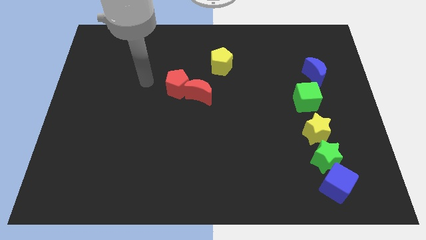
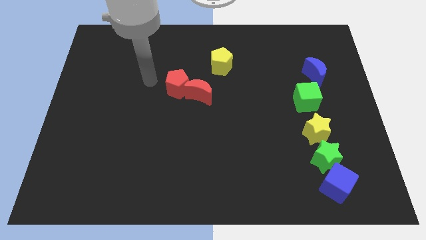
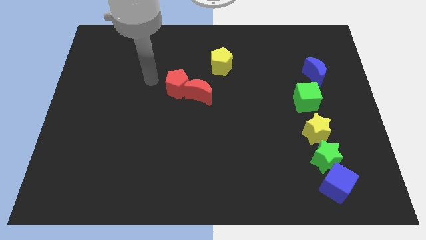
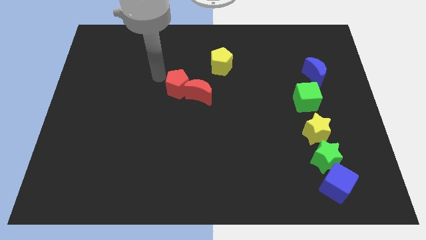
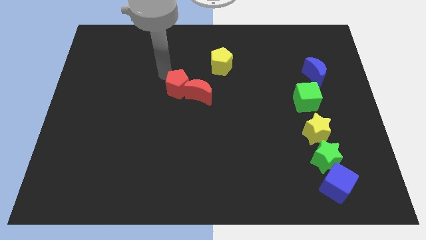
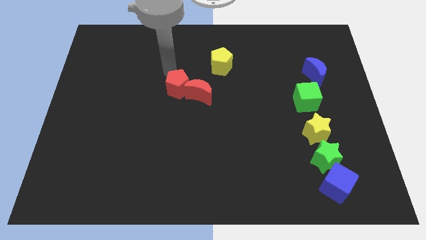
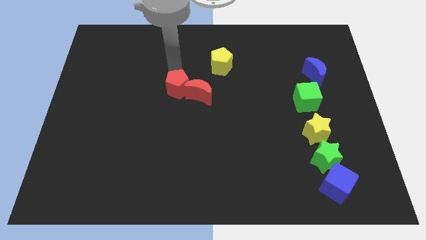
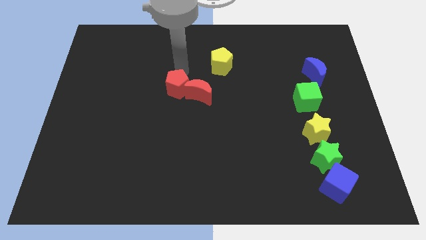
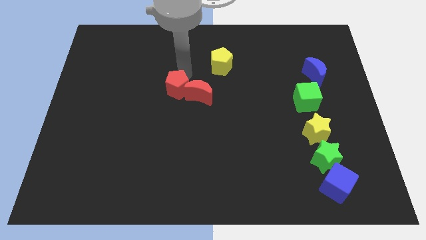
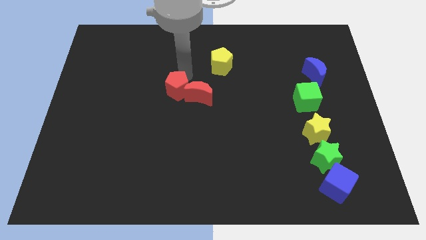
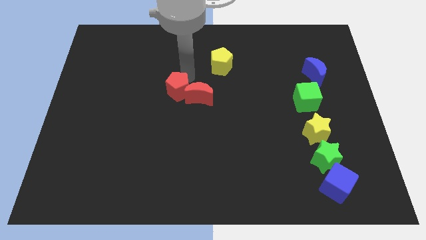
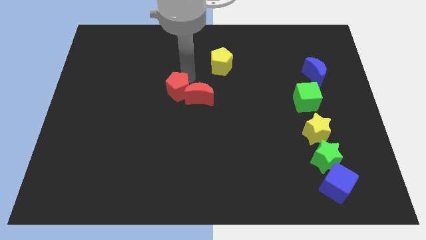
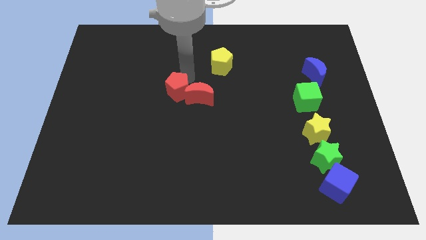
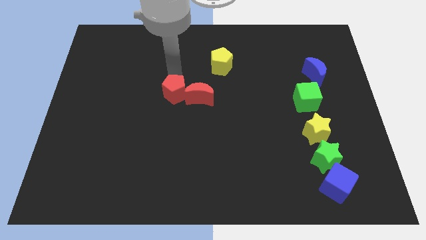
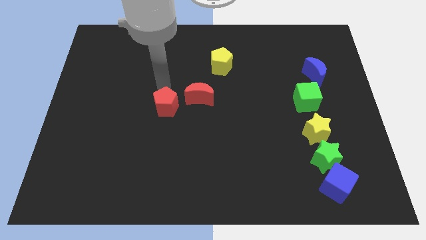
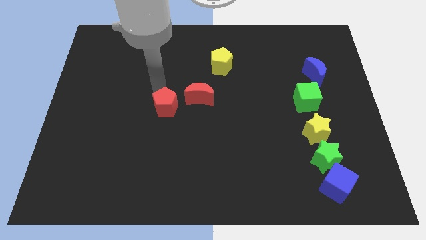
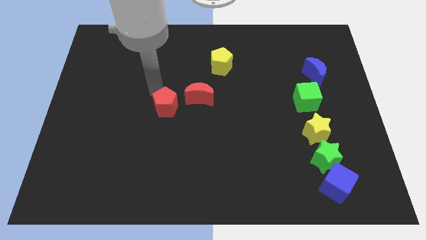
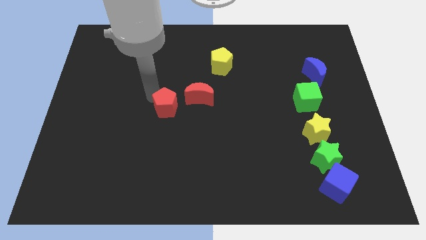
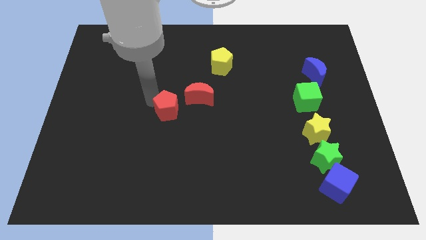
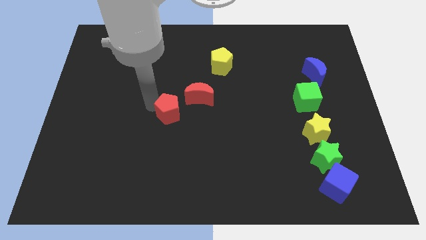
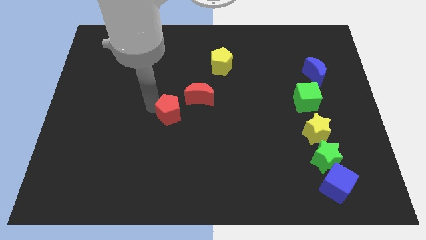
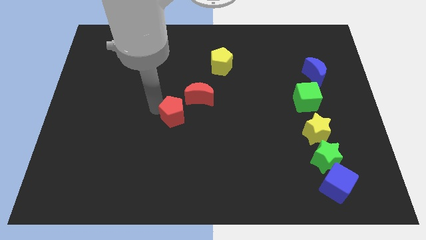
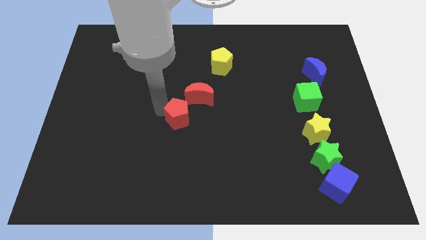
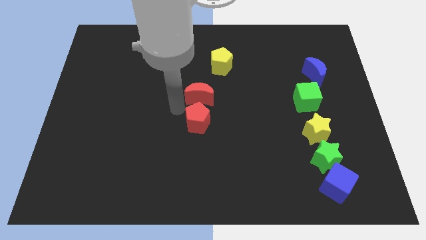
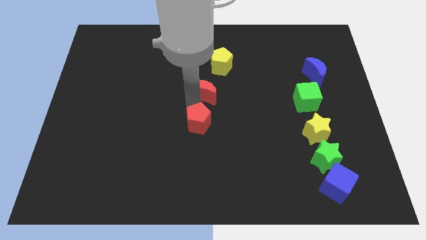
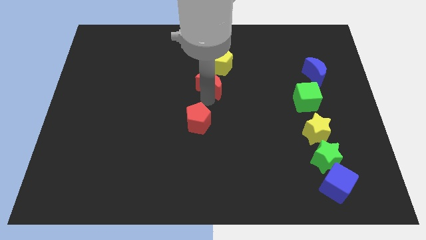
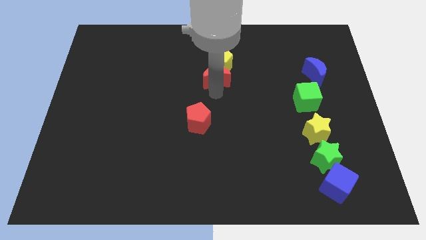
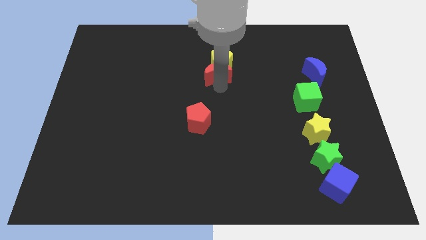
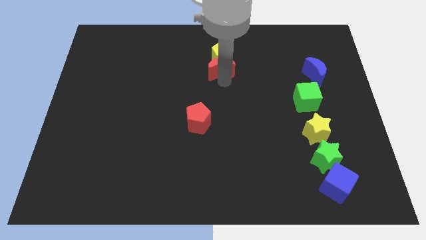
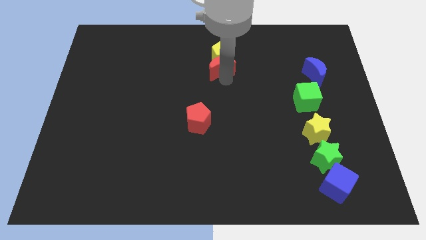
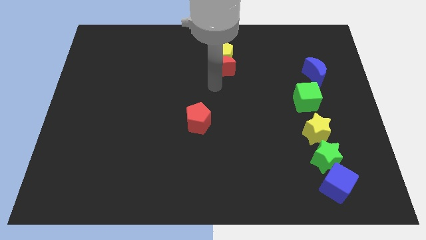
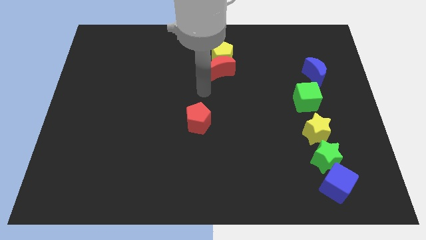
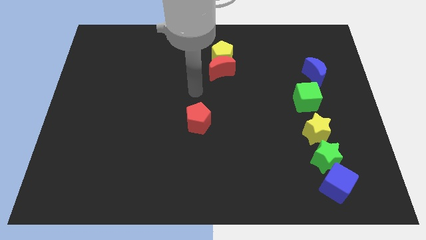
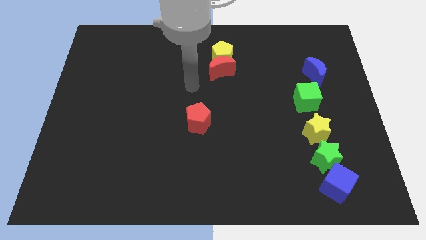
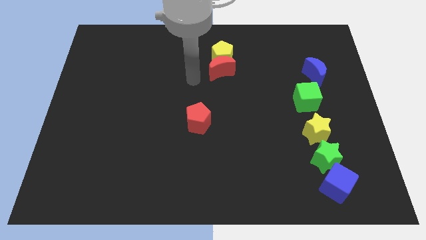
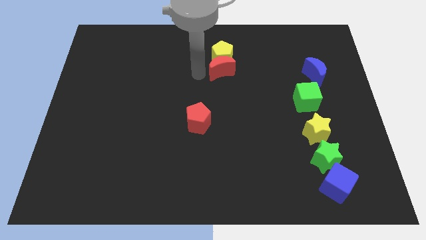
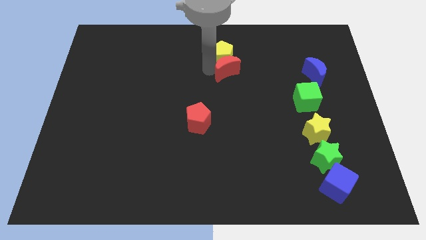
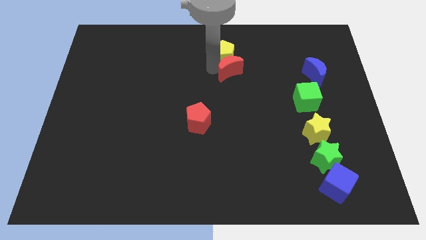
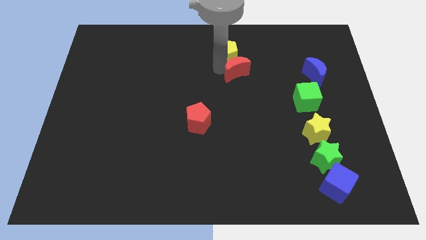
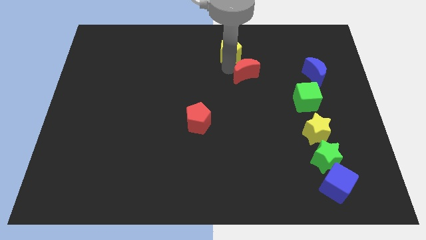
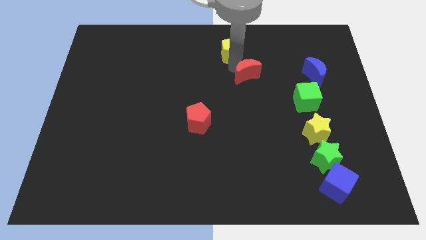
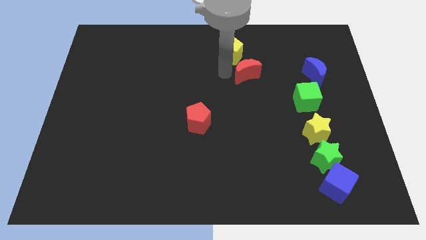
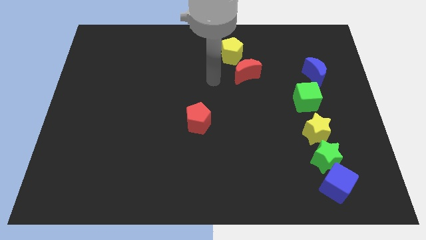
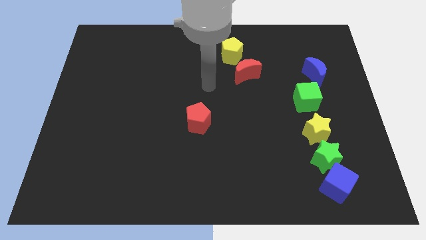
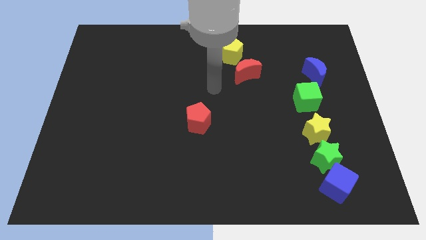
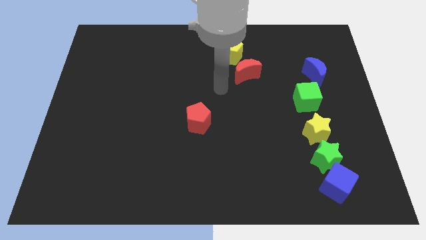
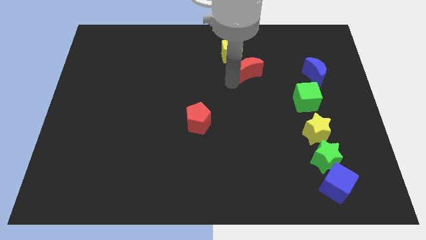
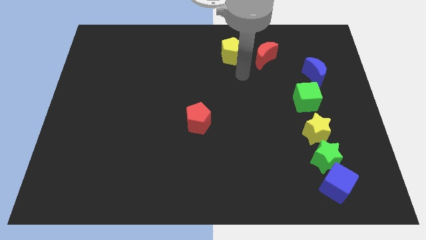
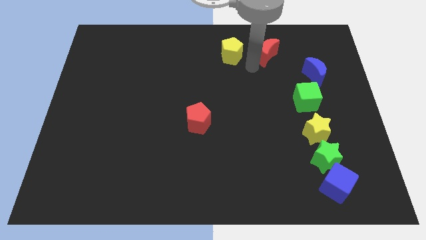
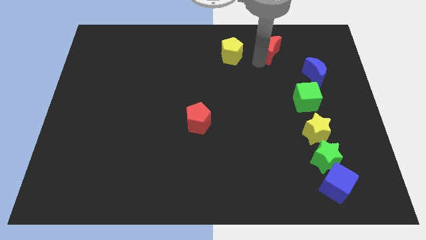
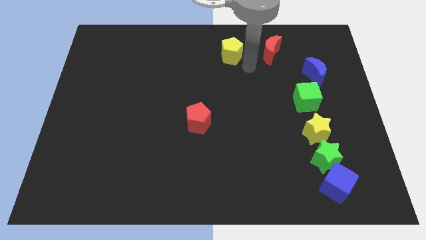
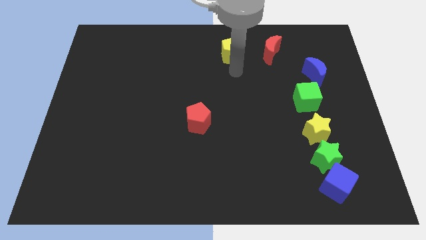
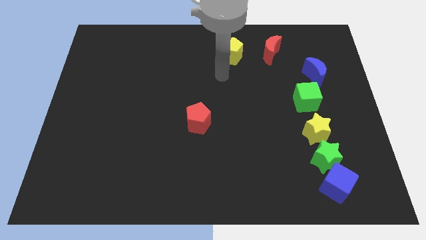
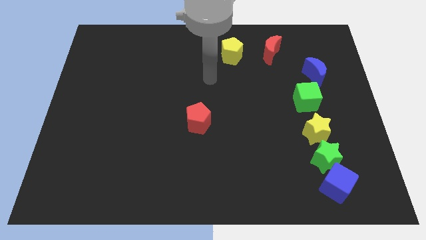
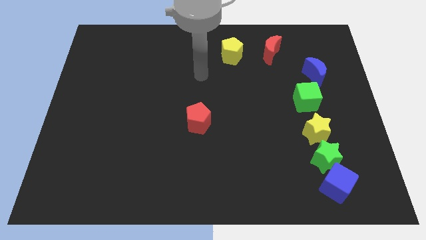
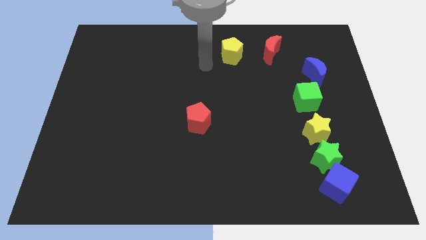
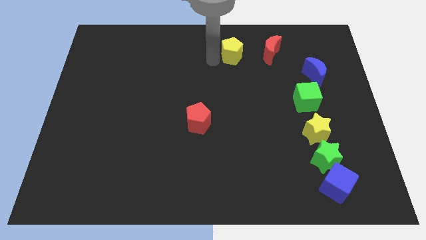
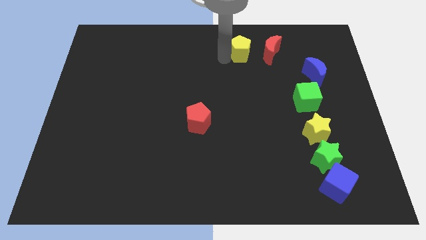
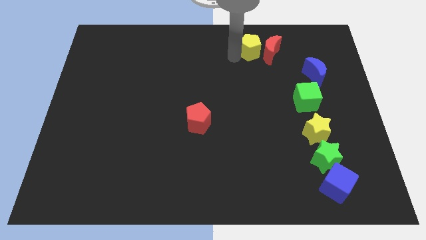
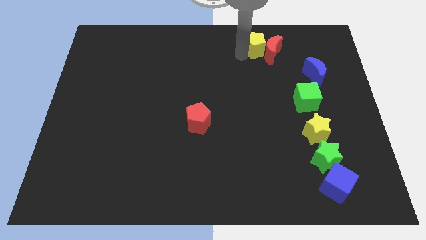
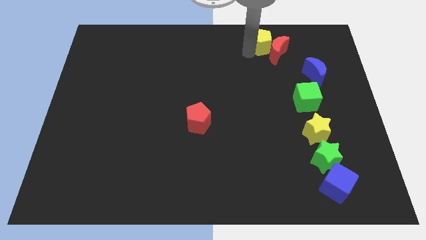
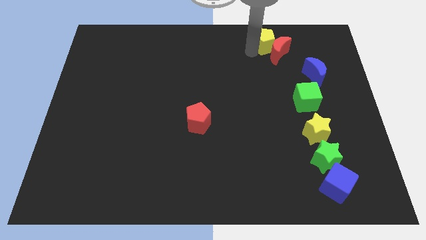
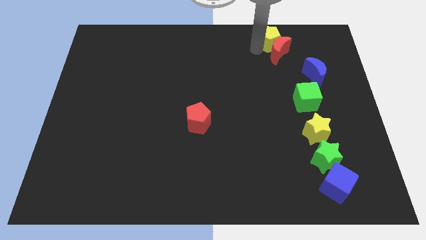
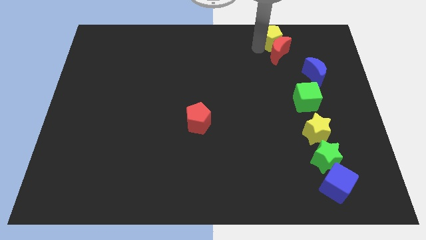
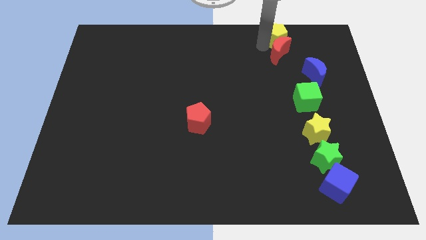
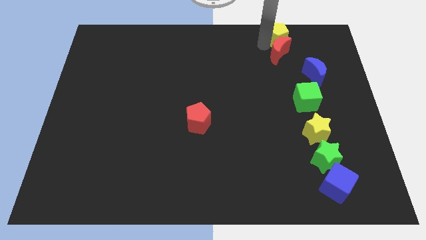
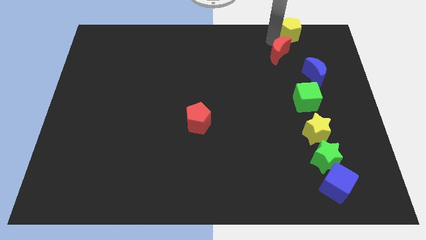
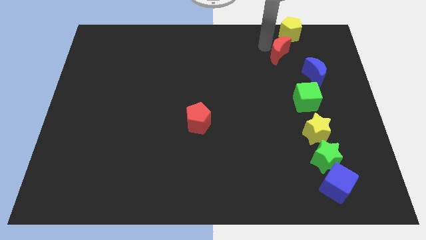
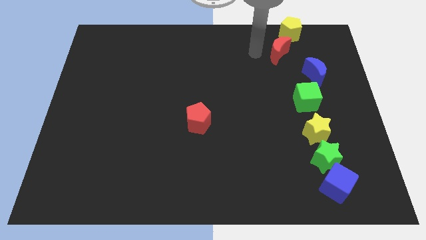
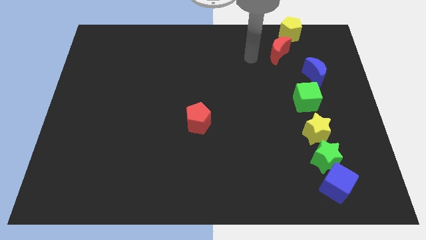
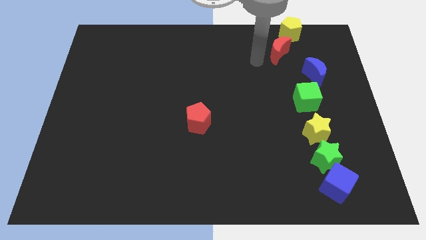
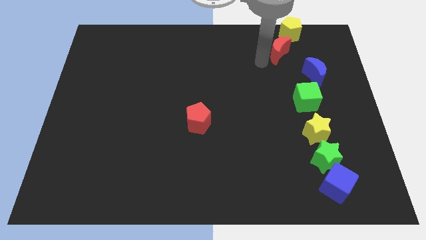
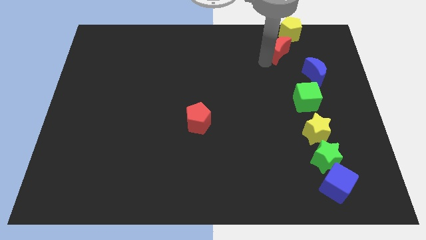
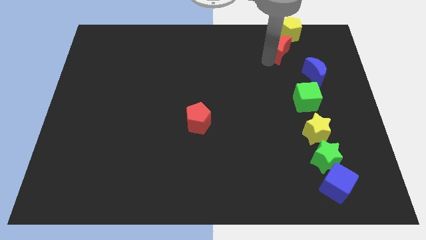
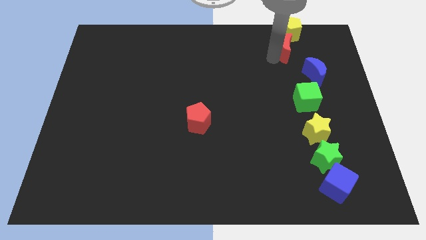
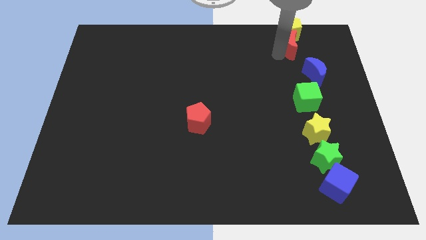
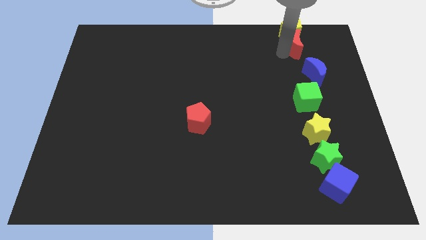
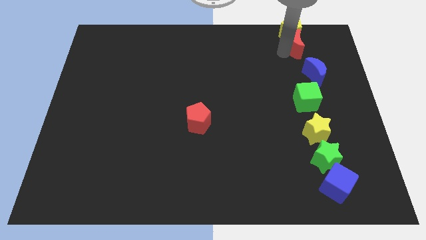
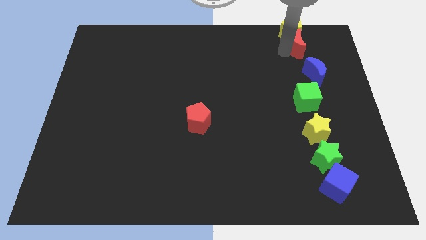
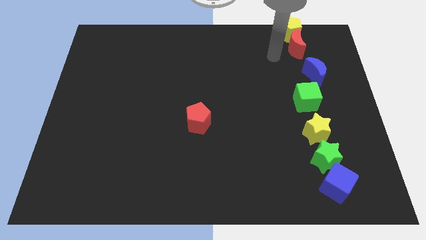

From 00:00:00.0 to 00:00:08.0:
push the red crescent and yellow pentagon to the top of the blue moon

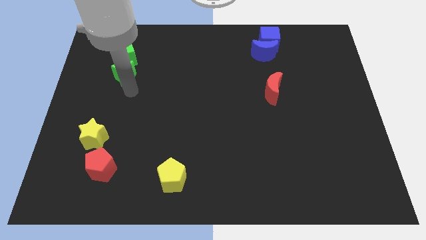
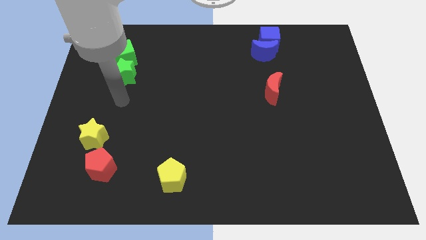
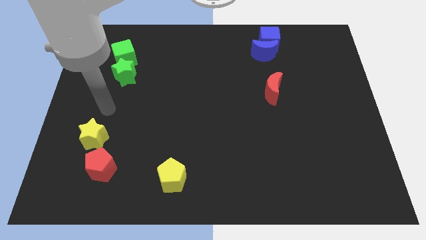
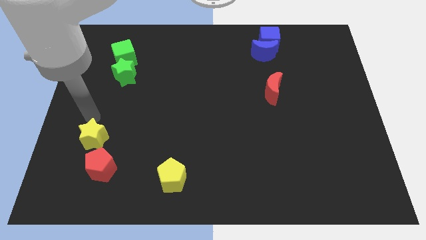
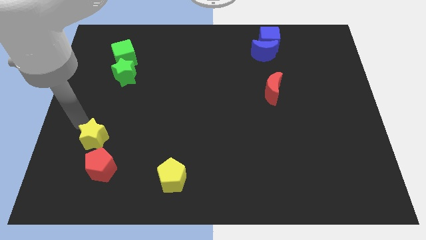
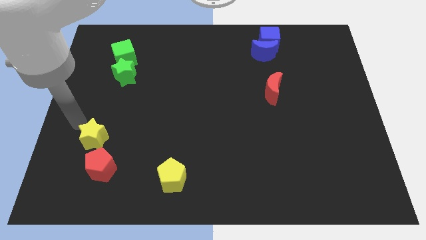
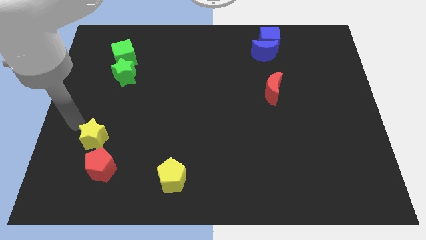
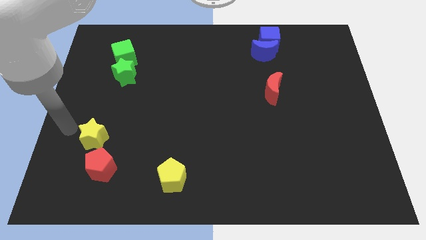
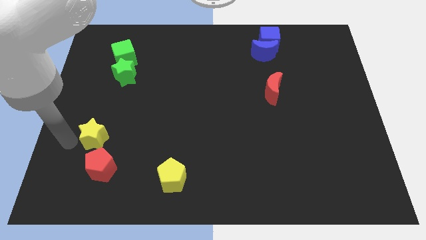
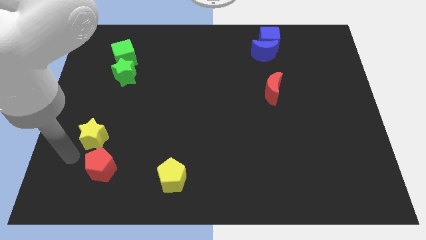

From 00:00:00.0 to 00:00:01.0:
point the arm to the left of the yellow star
